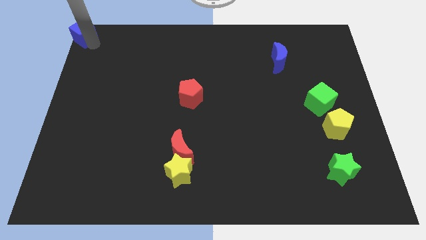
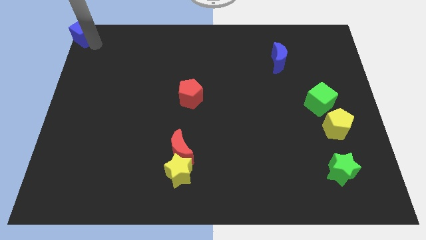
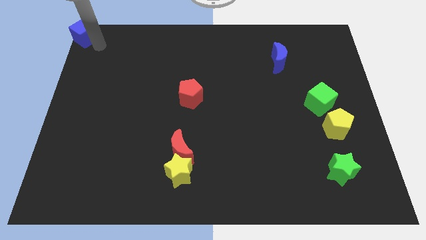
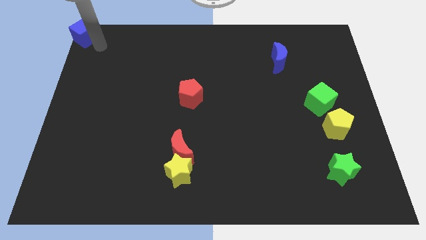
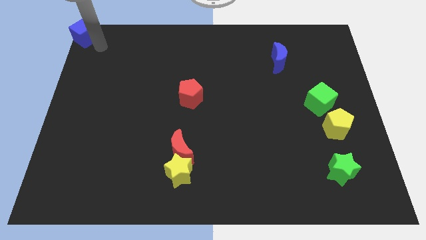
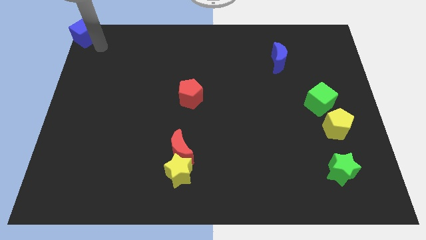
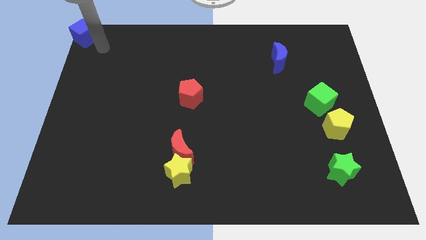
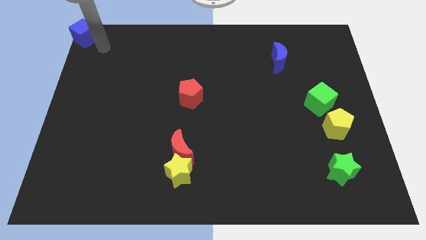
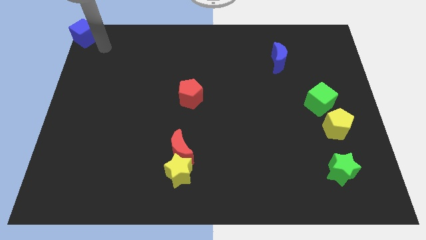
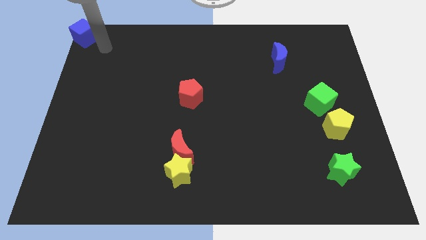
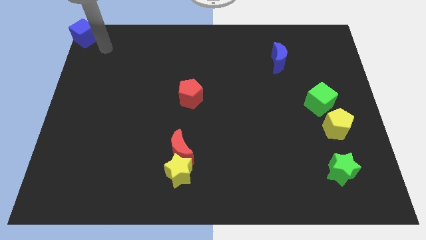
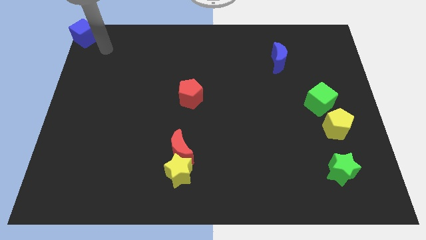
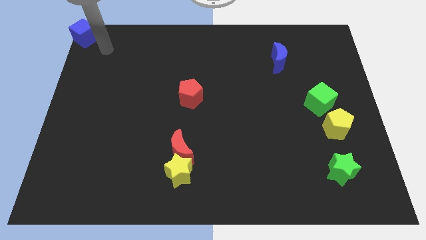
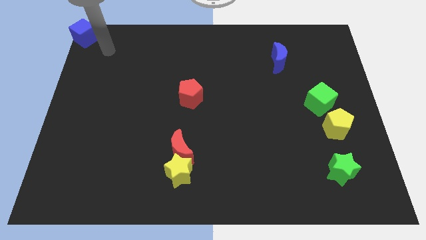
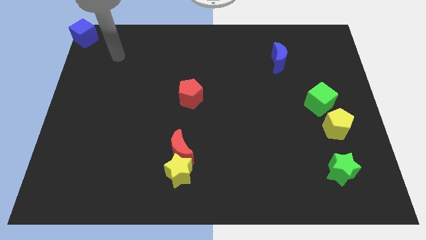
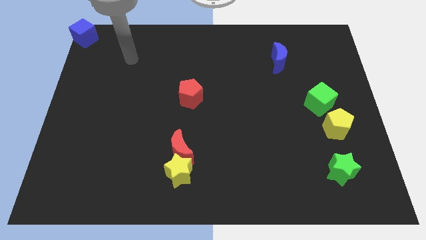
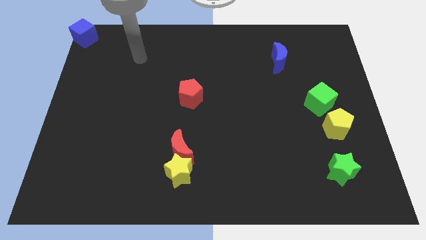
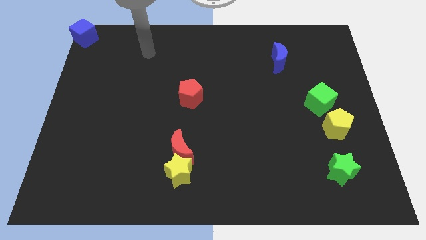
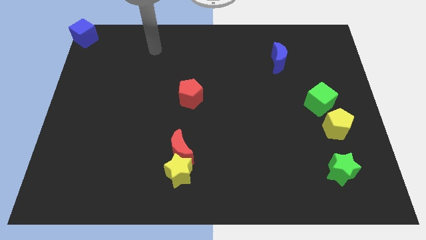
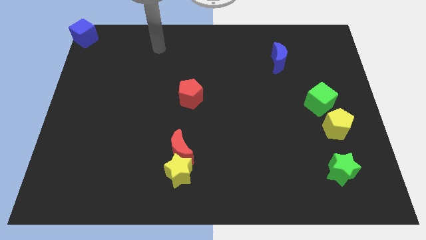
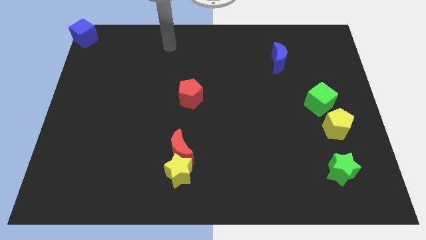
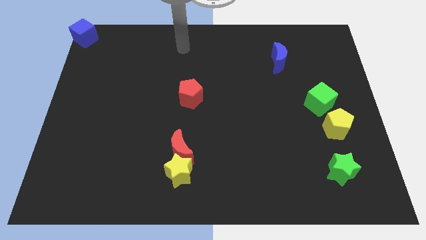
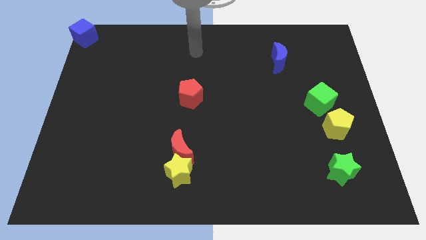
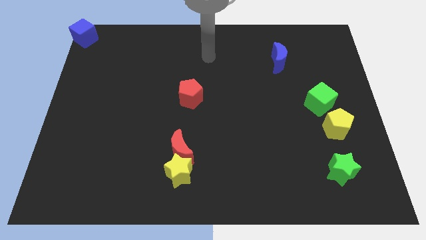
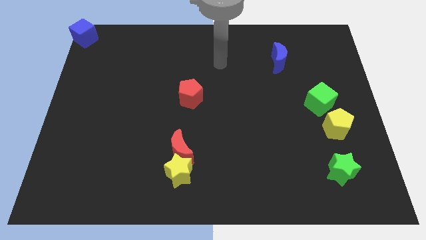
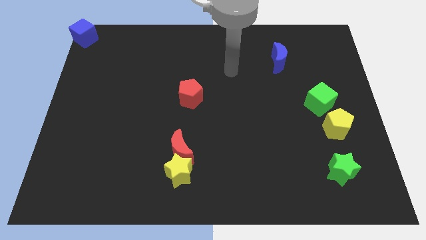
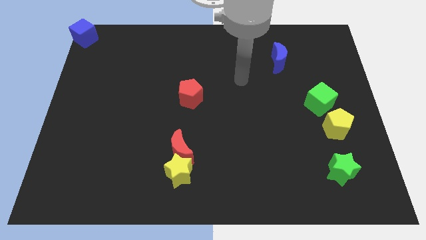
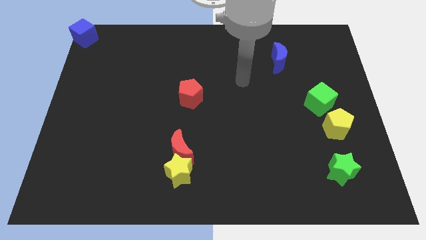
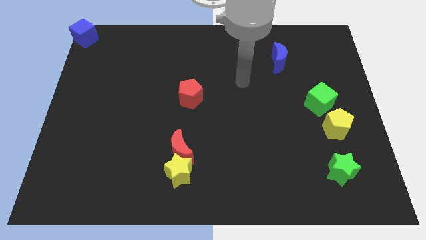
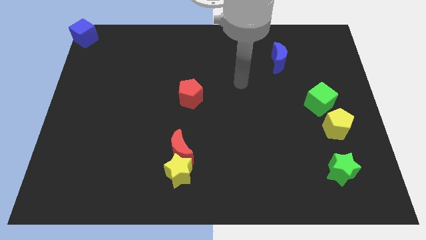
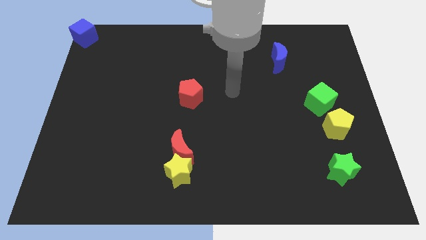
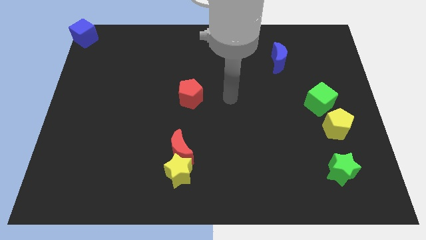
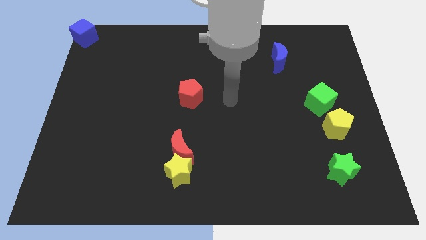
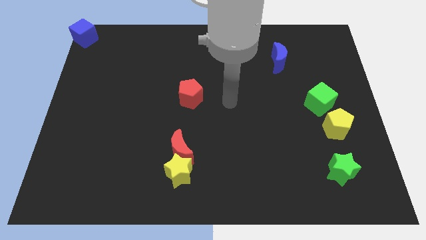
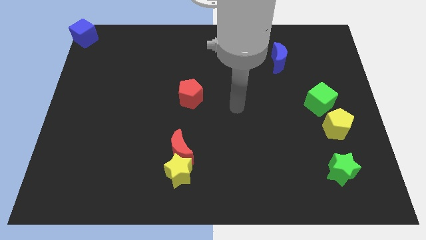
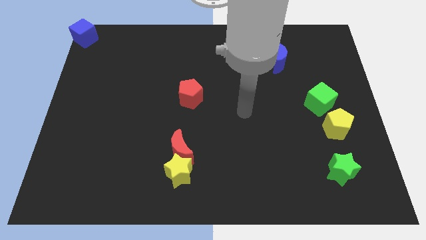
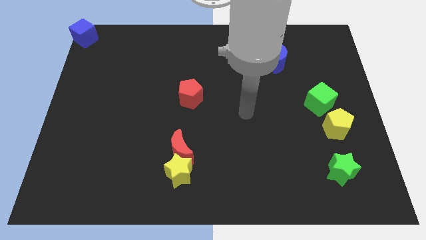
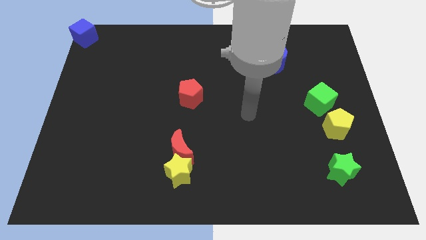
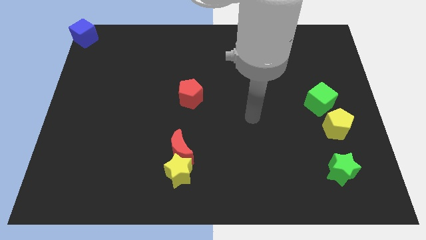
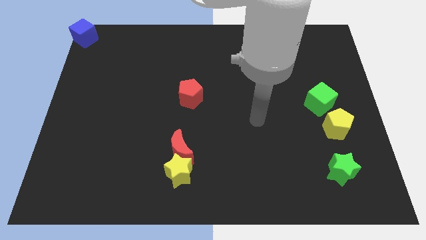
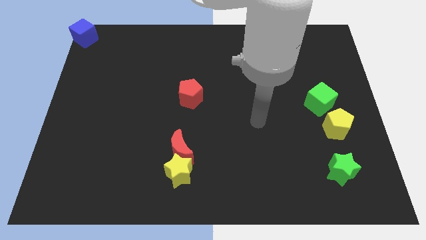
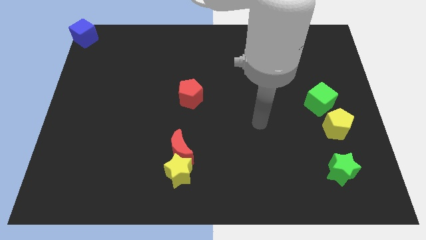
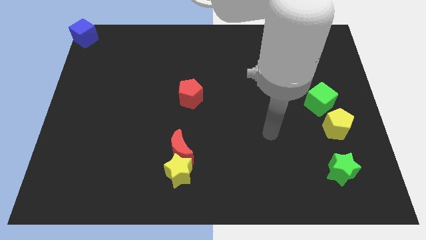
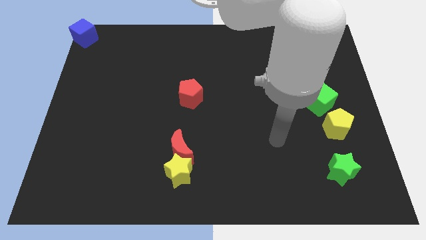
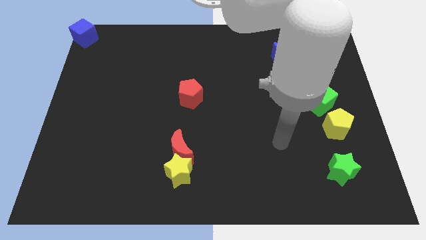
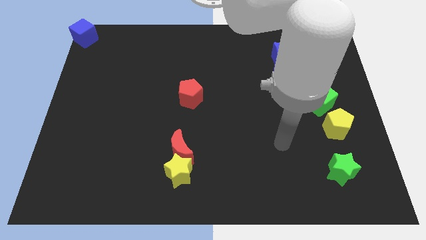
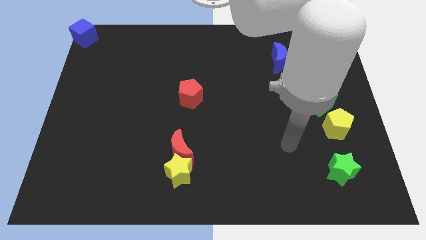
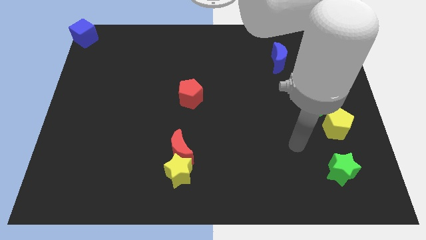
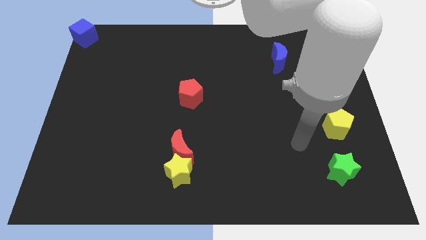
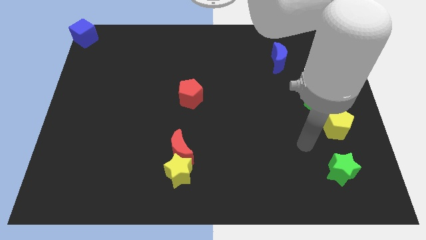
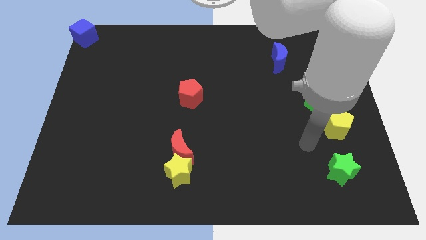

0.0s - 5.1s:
move your arm away from blue cube

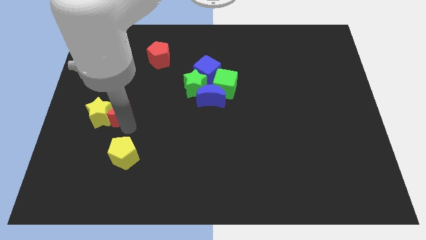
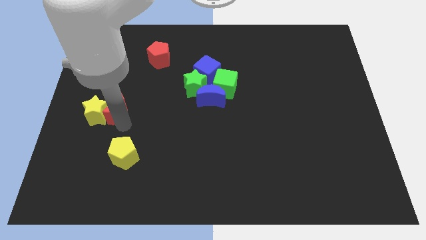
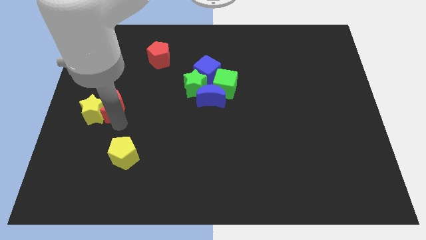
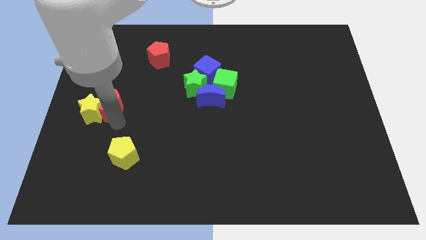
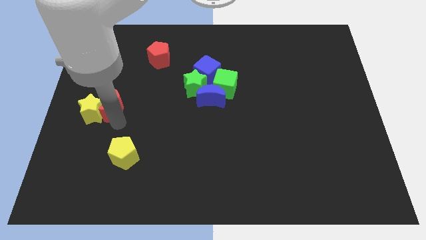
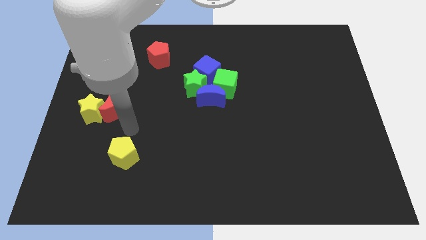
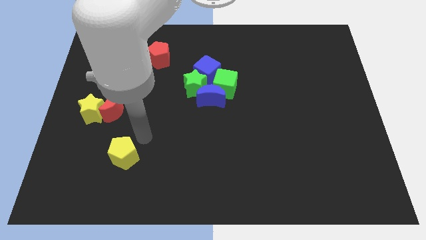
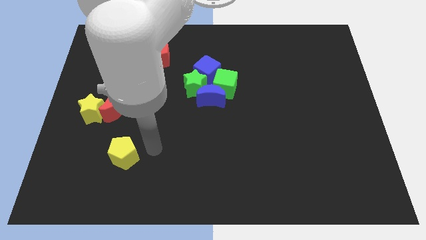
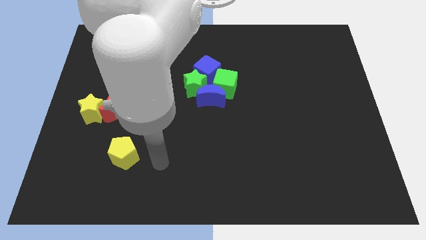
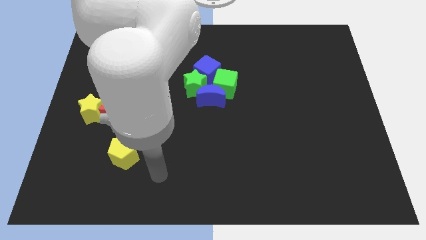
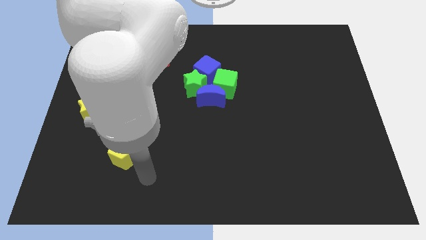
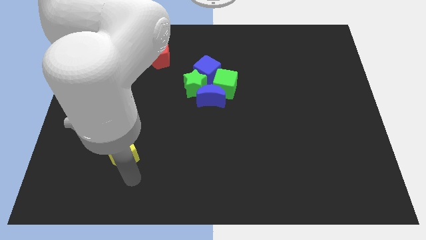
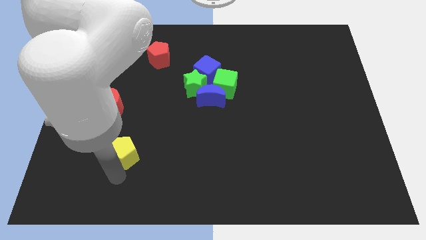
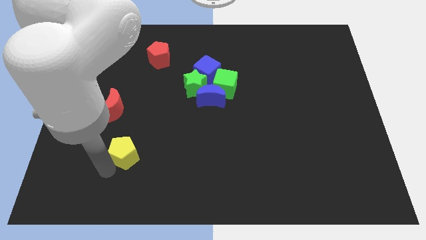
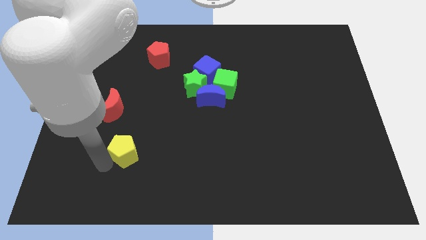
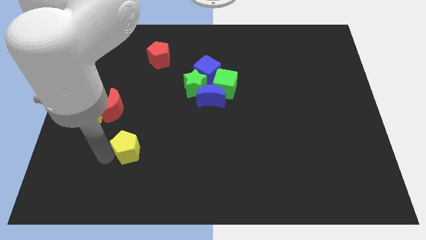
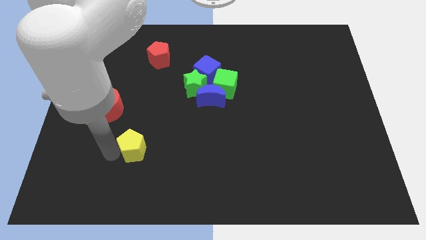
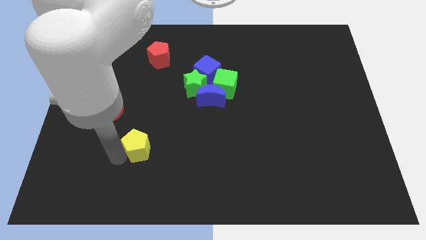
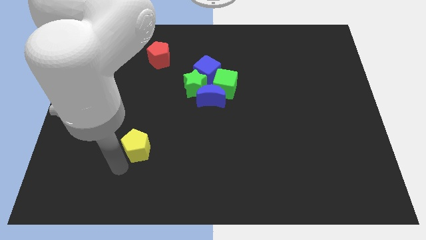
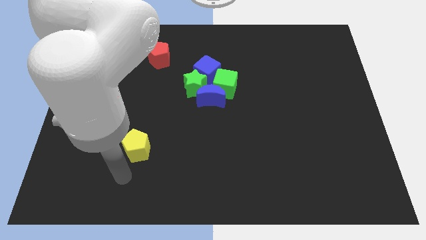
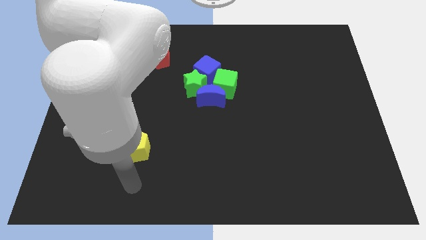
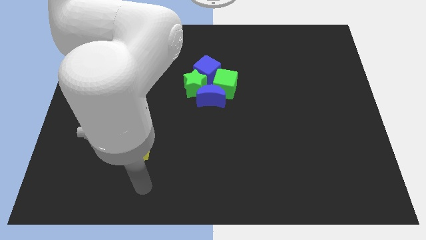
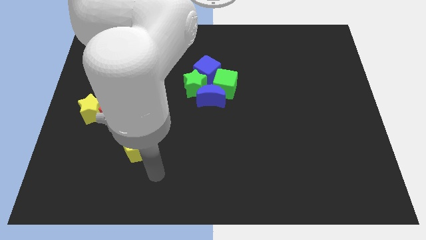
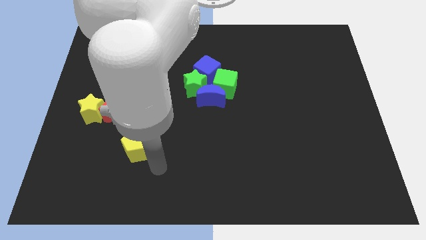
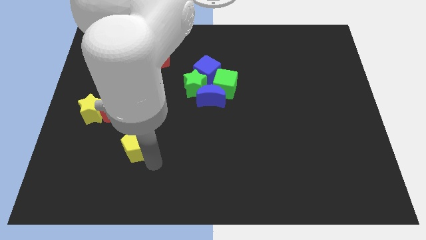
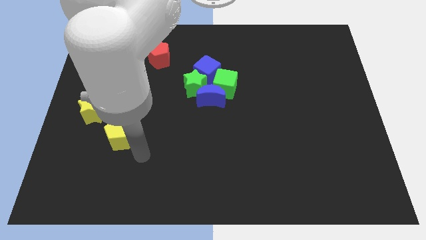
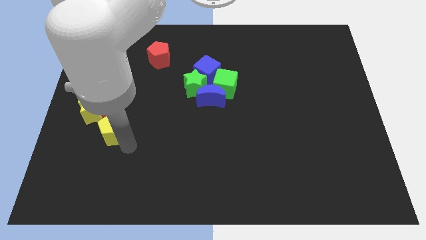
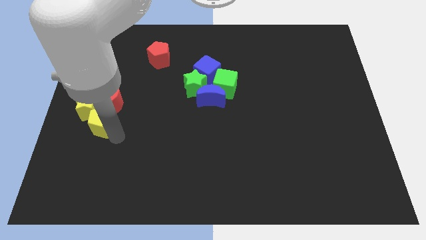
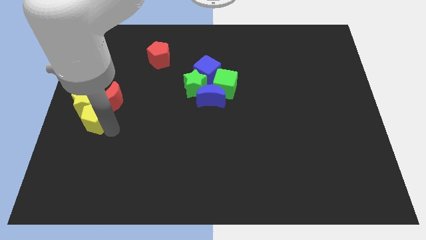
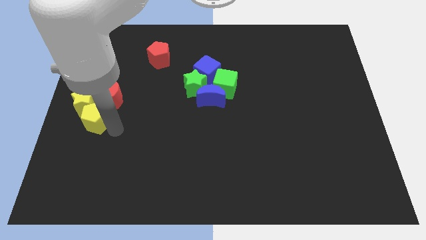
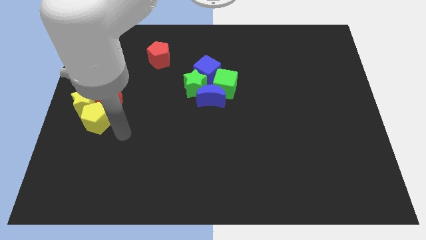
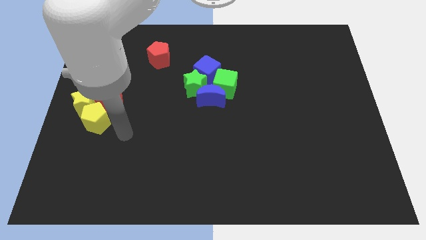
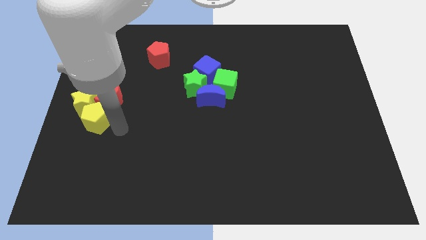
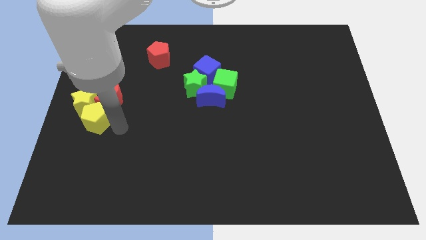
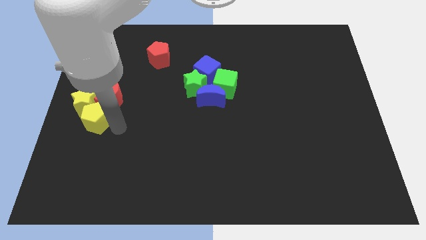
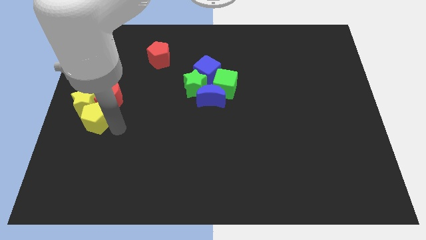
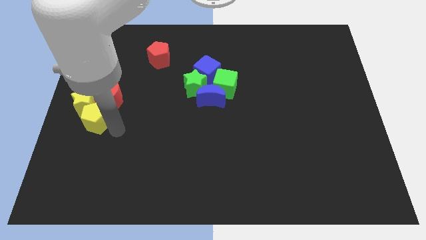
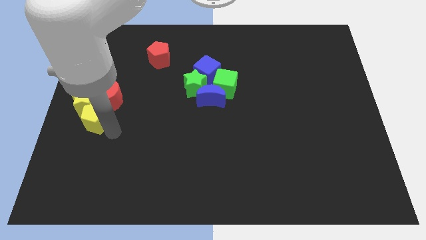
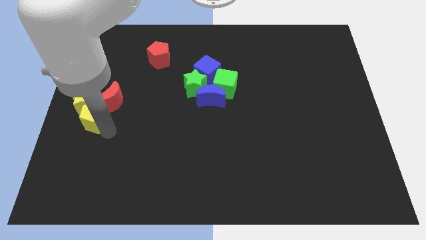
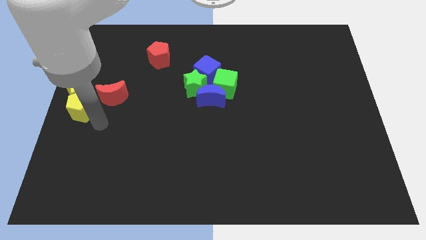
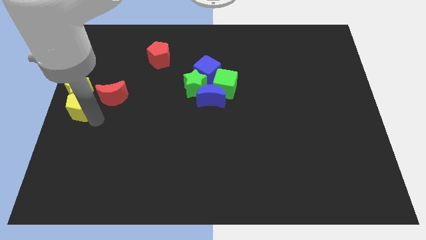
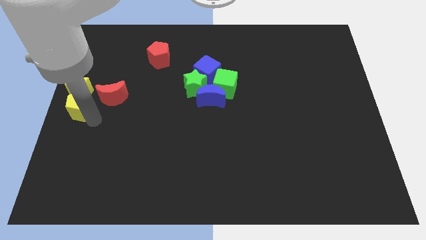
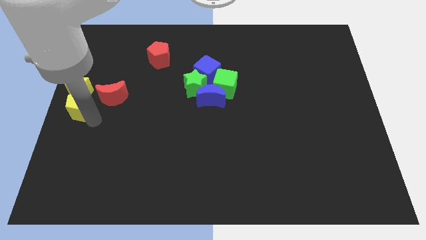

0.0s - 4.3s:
push the yellow pentagon into the yellow star
